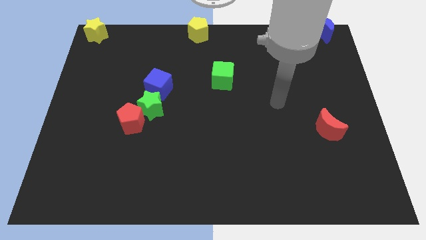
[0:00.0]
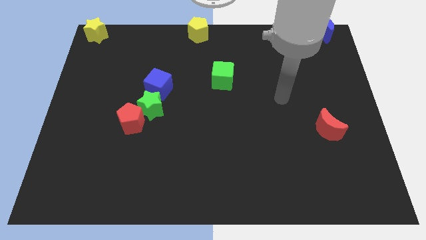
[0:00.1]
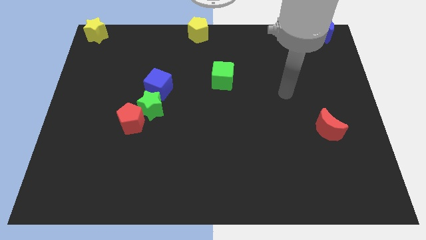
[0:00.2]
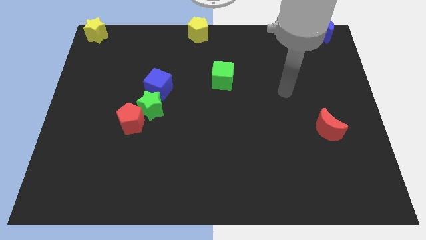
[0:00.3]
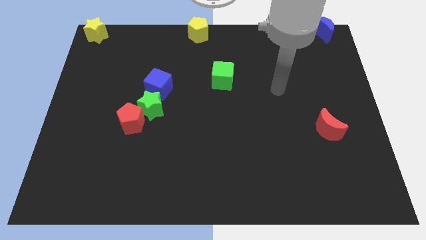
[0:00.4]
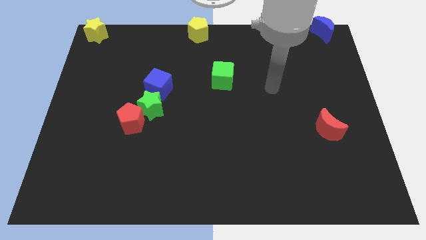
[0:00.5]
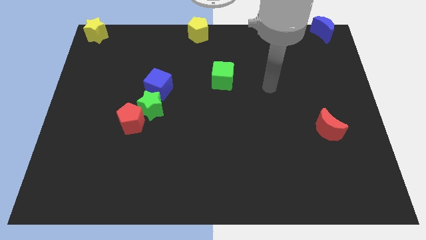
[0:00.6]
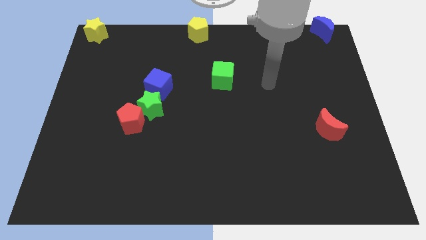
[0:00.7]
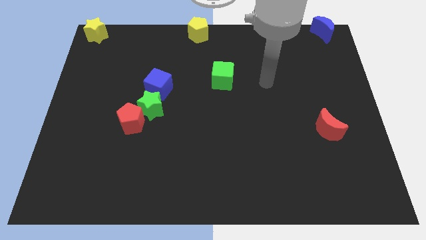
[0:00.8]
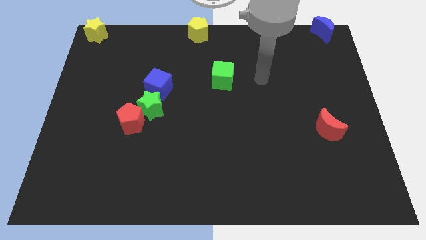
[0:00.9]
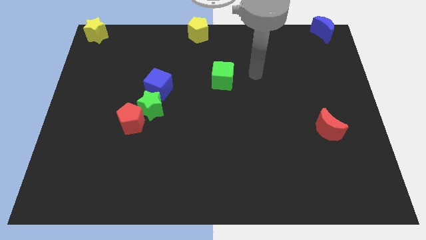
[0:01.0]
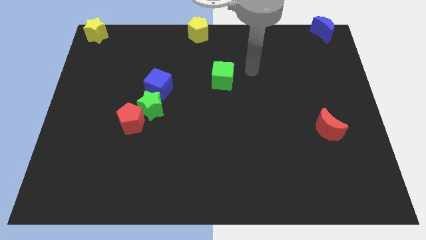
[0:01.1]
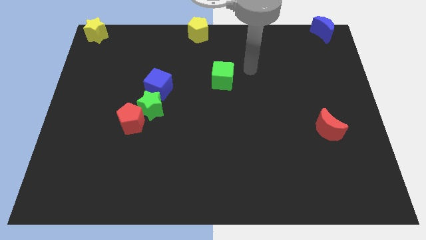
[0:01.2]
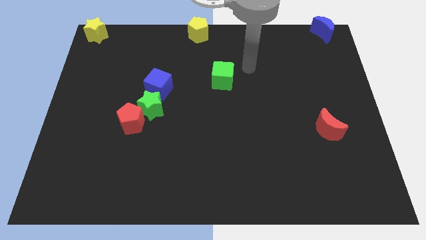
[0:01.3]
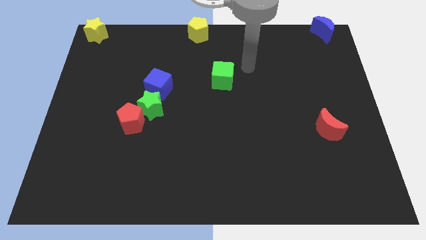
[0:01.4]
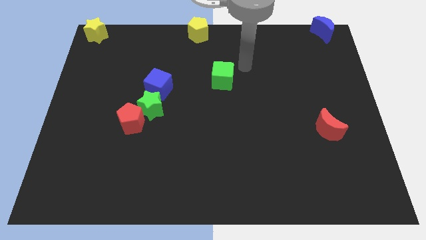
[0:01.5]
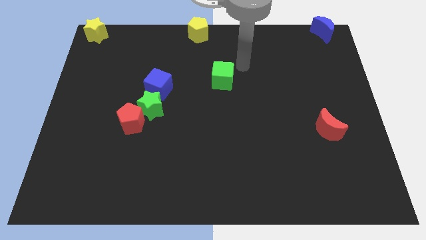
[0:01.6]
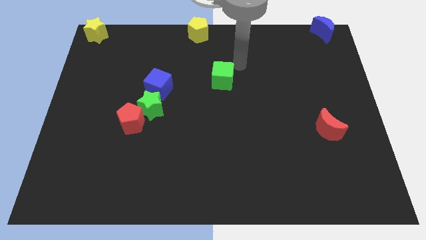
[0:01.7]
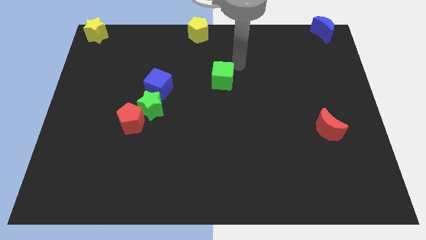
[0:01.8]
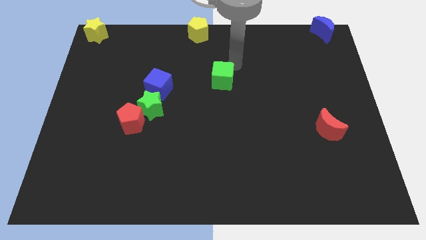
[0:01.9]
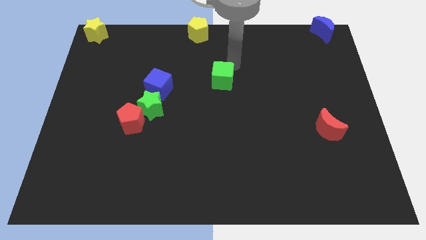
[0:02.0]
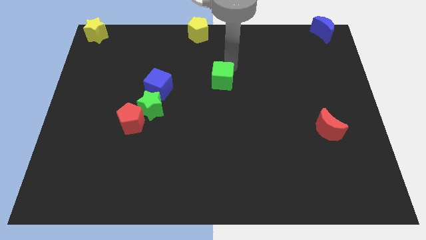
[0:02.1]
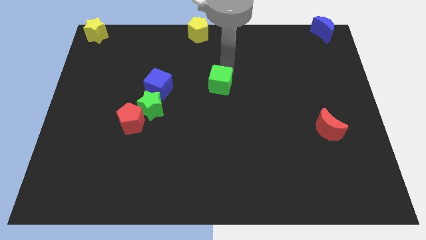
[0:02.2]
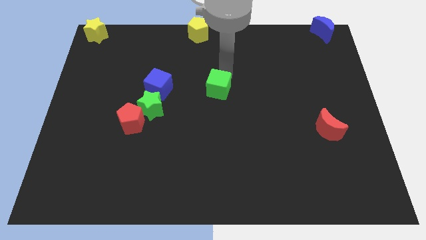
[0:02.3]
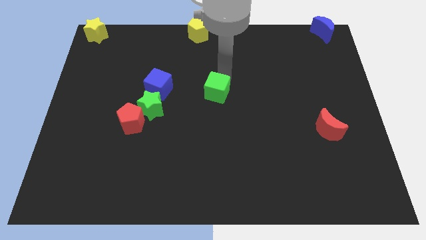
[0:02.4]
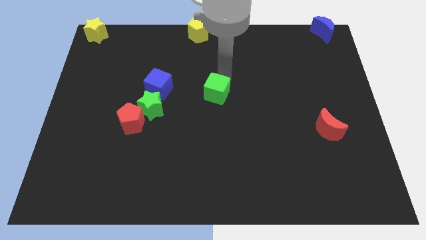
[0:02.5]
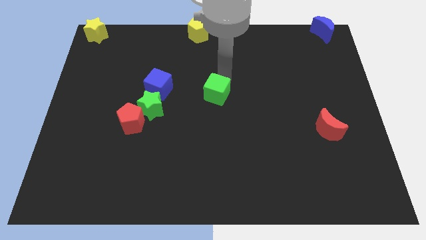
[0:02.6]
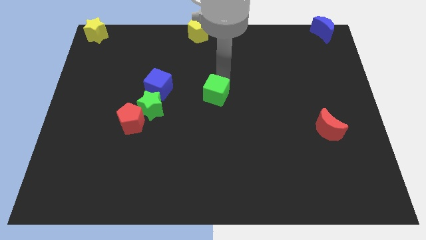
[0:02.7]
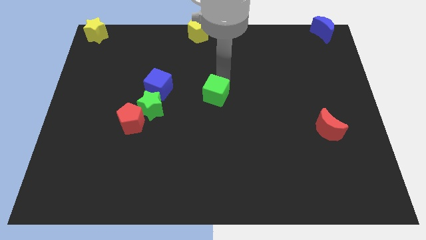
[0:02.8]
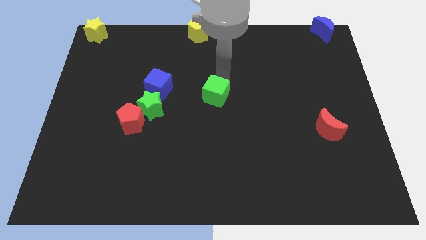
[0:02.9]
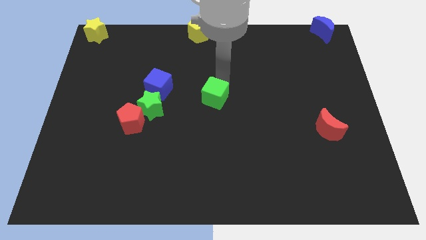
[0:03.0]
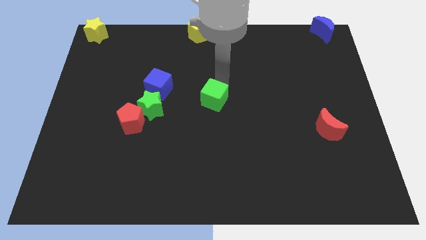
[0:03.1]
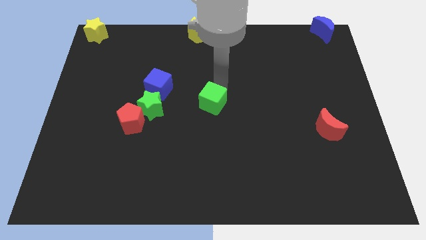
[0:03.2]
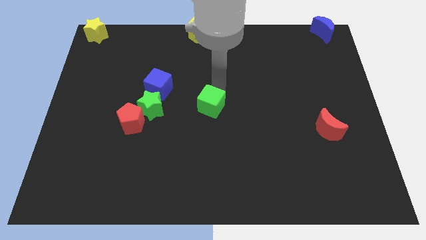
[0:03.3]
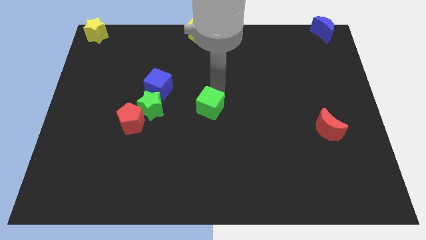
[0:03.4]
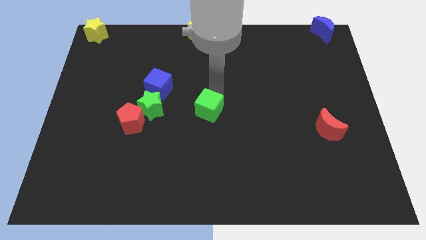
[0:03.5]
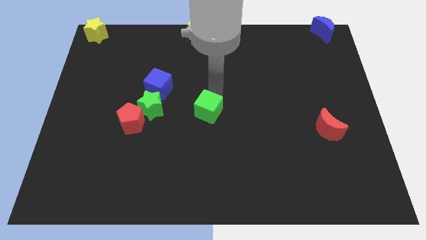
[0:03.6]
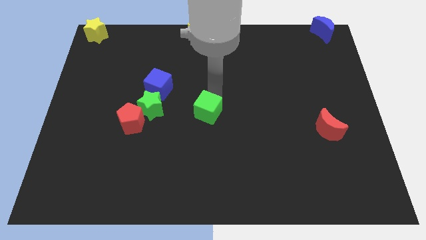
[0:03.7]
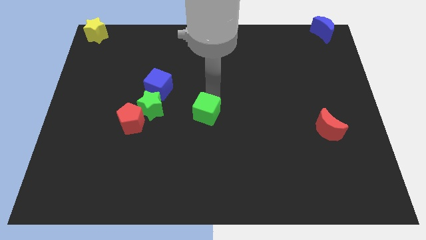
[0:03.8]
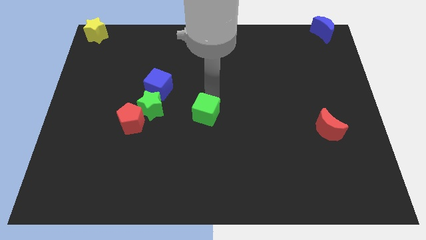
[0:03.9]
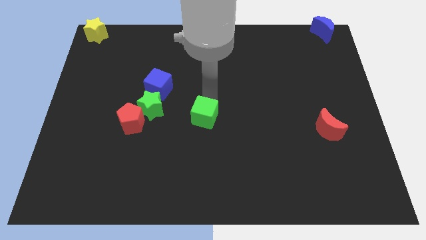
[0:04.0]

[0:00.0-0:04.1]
place the green cube to the right side of green star

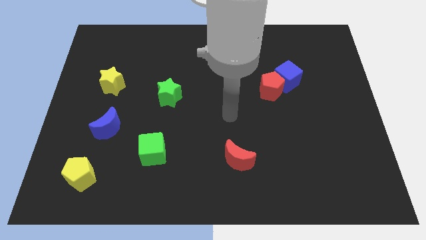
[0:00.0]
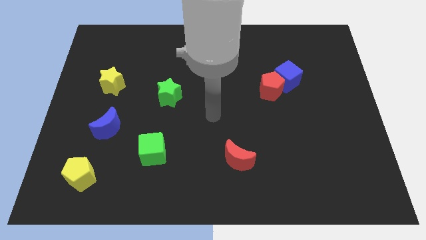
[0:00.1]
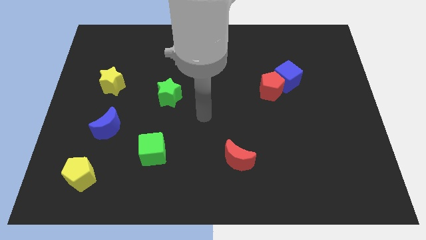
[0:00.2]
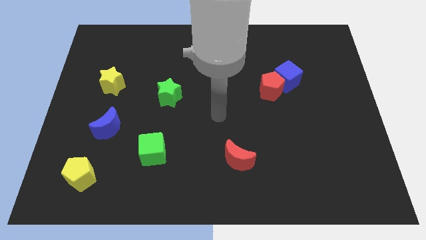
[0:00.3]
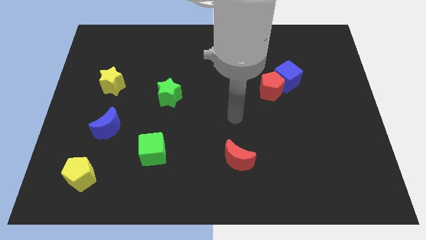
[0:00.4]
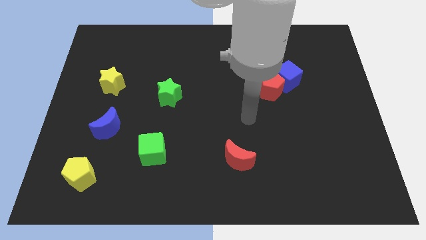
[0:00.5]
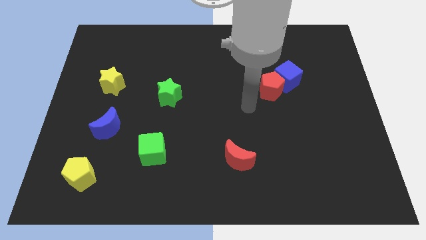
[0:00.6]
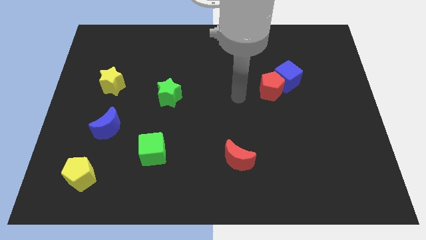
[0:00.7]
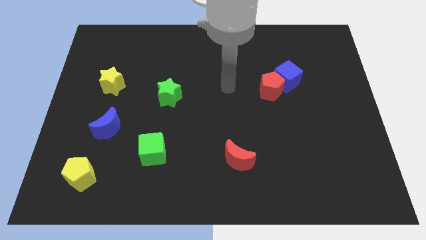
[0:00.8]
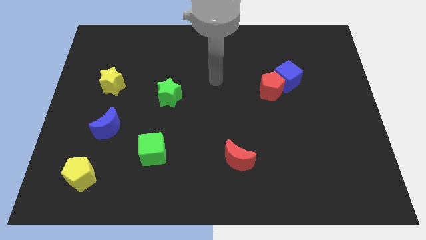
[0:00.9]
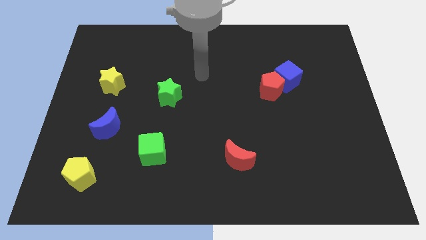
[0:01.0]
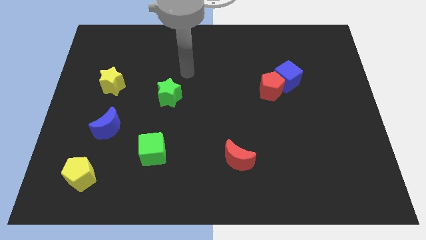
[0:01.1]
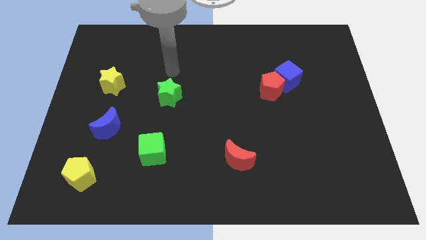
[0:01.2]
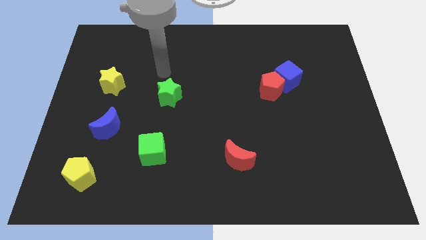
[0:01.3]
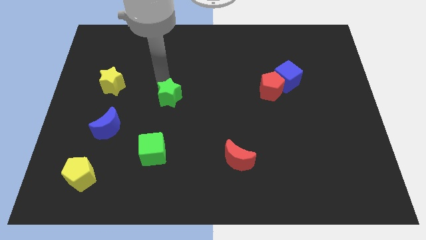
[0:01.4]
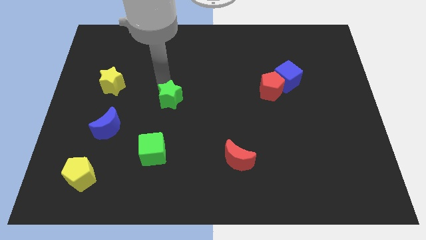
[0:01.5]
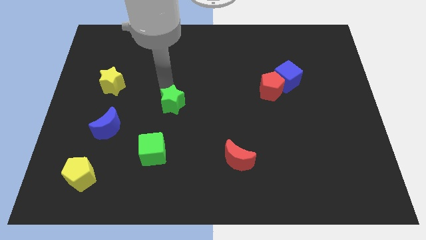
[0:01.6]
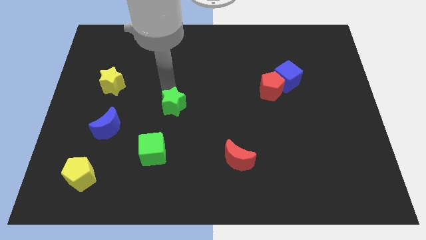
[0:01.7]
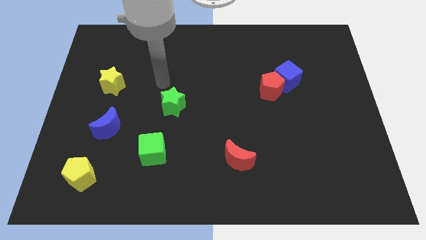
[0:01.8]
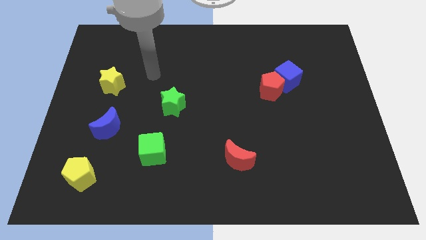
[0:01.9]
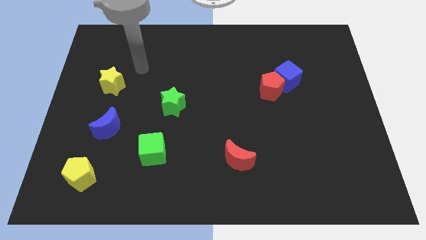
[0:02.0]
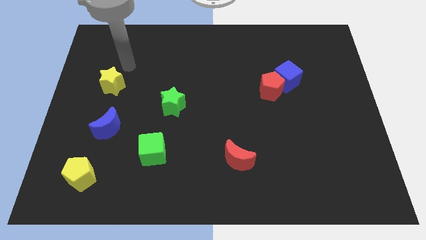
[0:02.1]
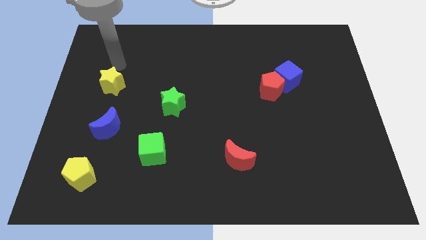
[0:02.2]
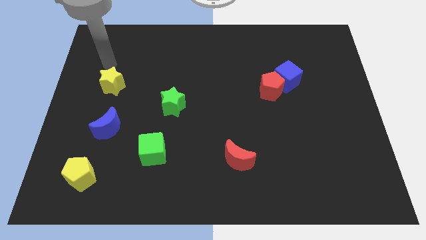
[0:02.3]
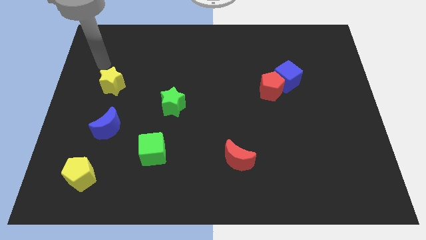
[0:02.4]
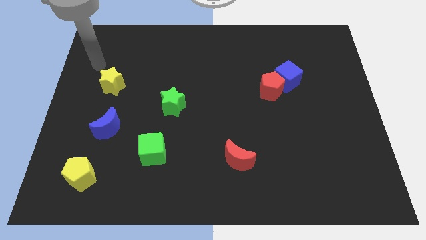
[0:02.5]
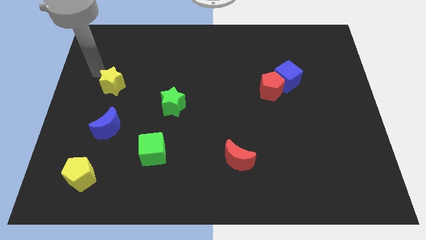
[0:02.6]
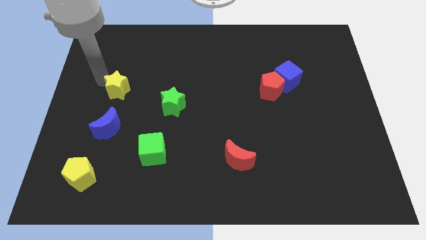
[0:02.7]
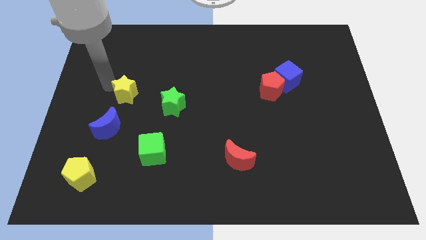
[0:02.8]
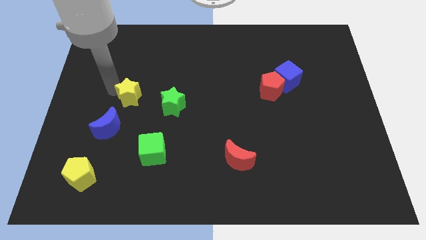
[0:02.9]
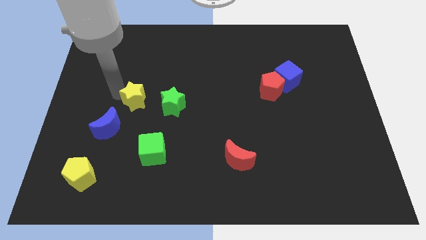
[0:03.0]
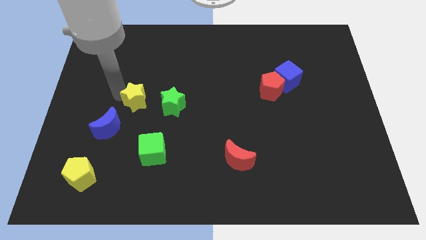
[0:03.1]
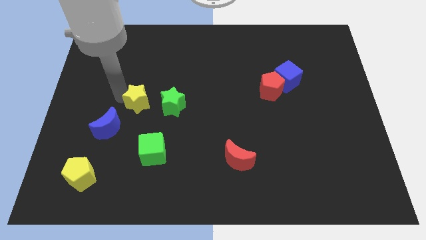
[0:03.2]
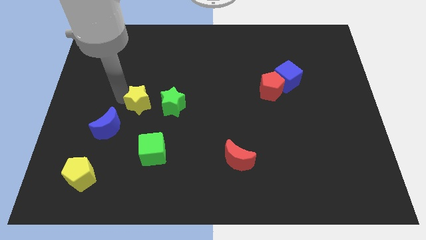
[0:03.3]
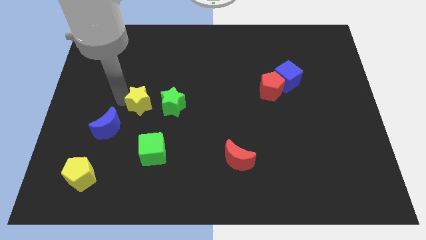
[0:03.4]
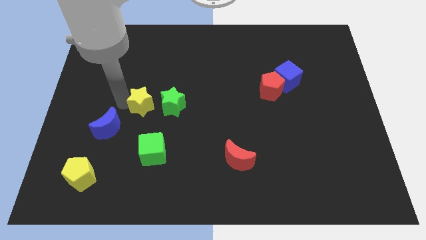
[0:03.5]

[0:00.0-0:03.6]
push the yellow star closer to the green star

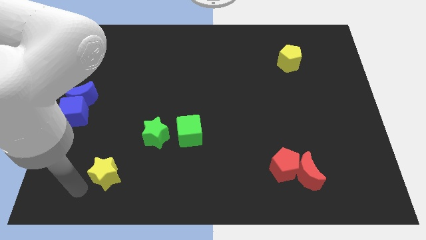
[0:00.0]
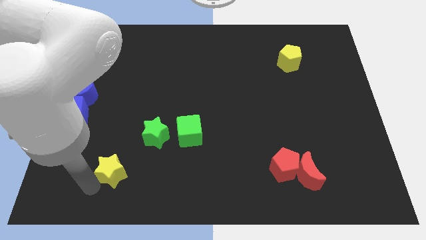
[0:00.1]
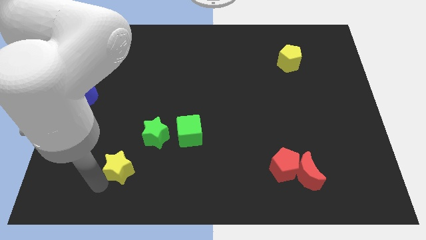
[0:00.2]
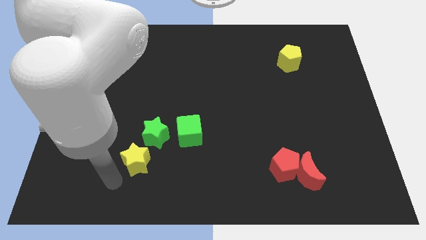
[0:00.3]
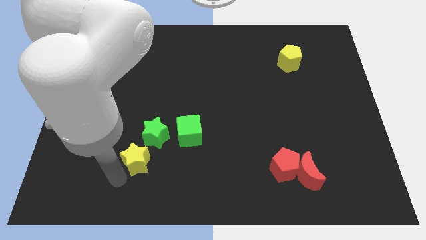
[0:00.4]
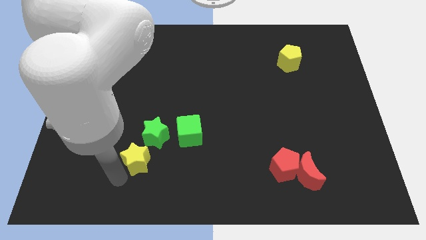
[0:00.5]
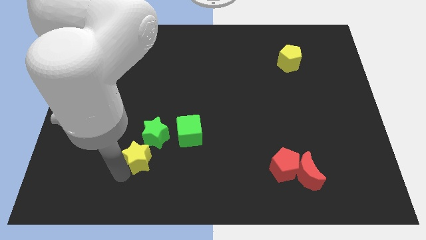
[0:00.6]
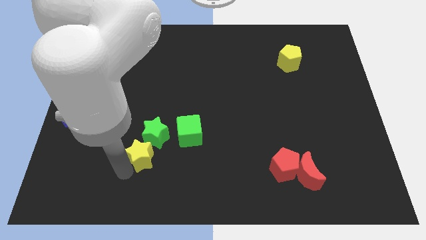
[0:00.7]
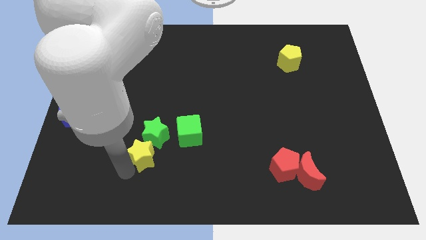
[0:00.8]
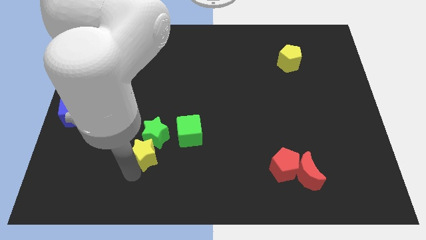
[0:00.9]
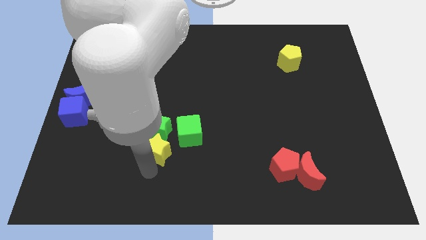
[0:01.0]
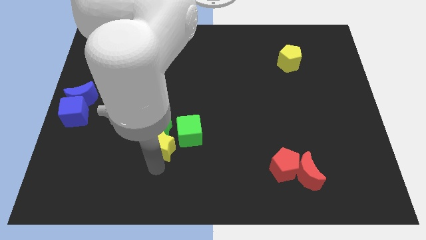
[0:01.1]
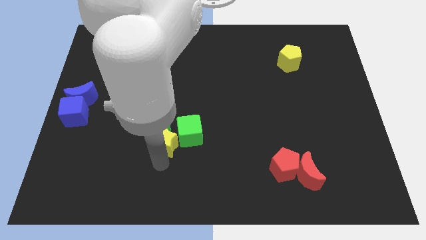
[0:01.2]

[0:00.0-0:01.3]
slide the yellow star into the green star
